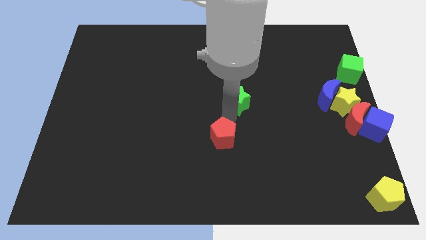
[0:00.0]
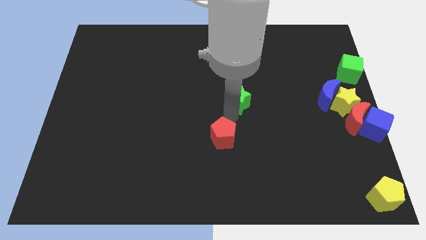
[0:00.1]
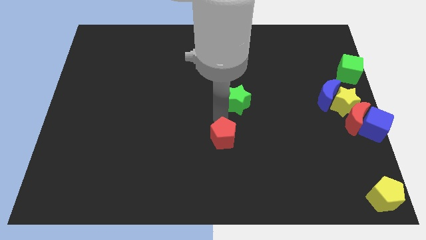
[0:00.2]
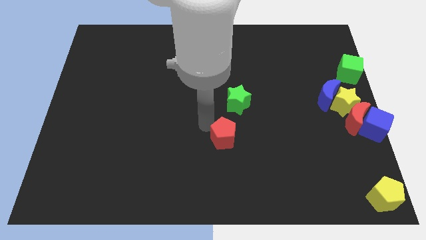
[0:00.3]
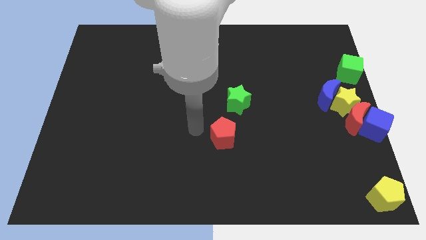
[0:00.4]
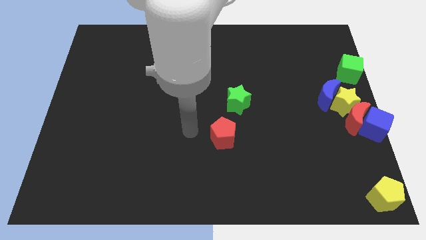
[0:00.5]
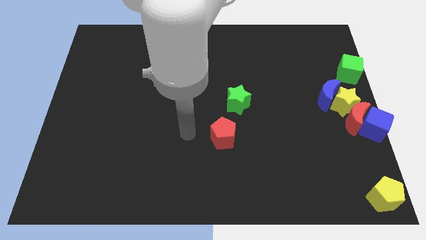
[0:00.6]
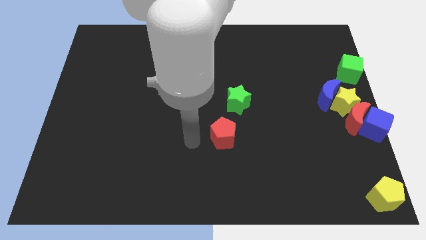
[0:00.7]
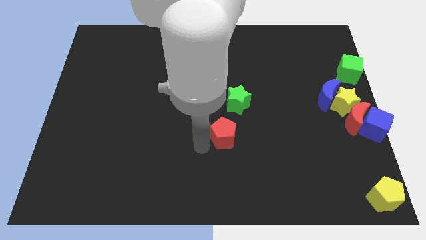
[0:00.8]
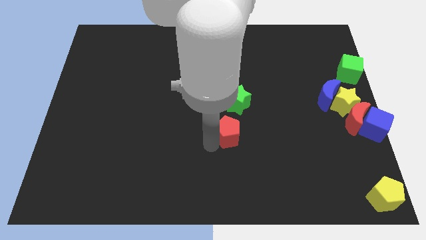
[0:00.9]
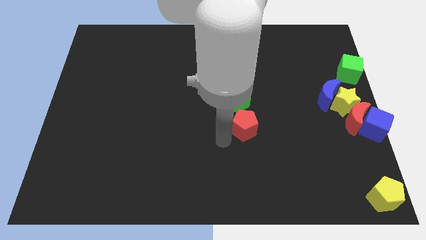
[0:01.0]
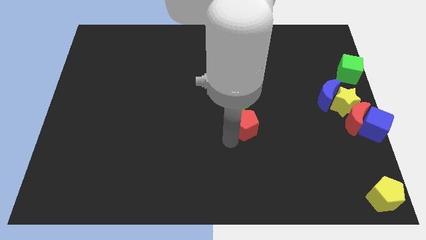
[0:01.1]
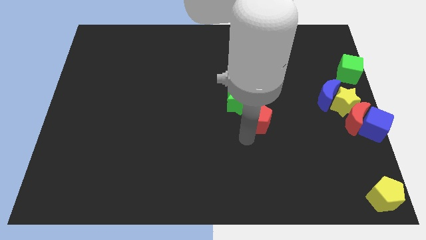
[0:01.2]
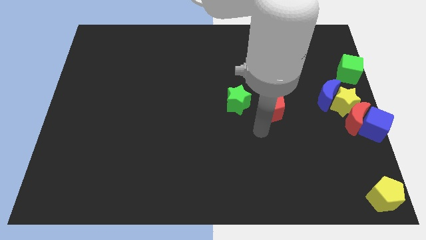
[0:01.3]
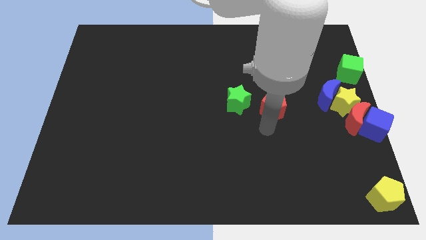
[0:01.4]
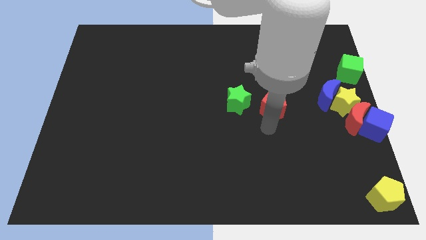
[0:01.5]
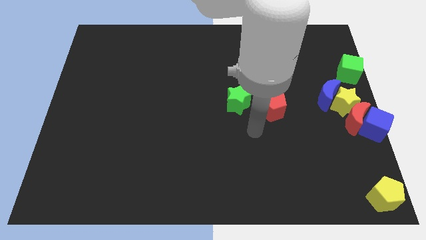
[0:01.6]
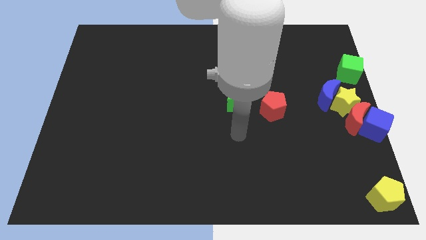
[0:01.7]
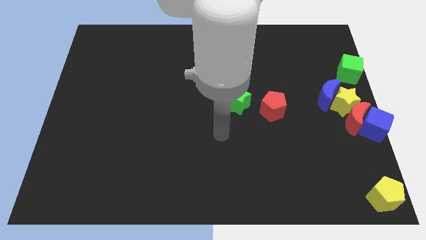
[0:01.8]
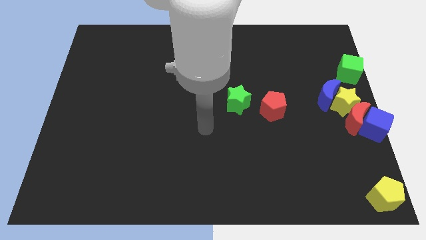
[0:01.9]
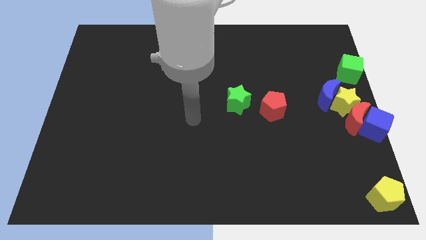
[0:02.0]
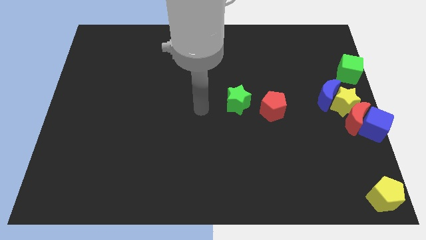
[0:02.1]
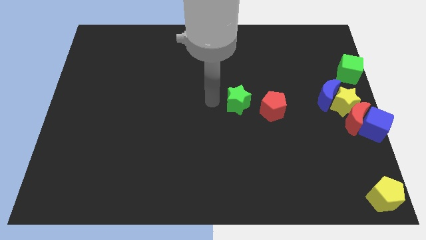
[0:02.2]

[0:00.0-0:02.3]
push the red pentagon right to the green star

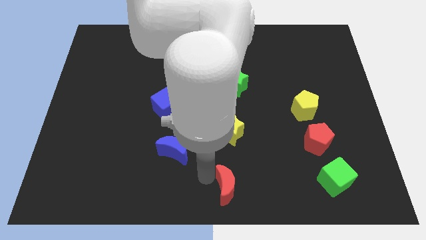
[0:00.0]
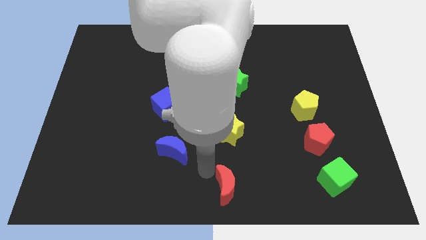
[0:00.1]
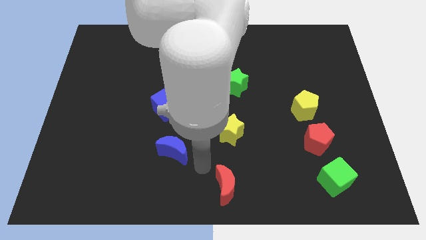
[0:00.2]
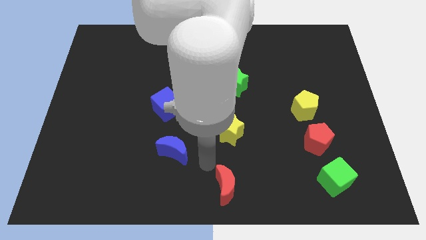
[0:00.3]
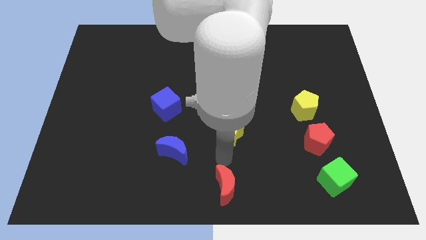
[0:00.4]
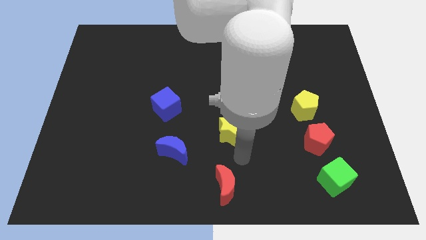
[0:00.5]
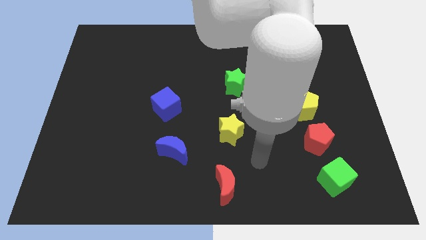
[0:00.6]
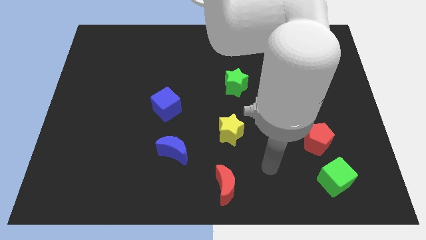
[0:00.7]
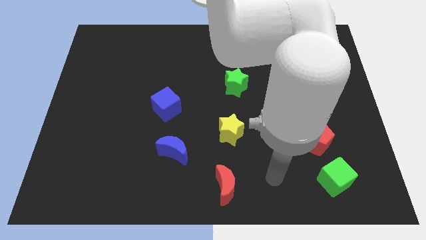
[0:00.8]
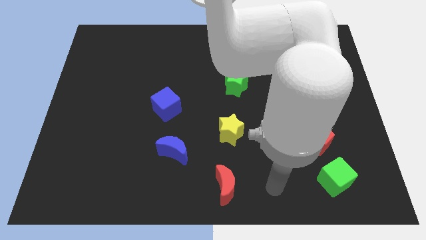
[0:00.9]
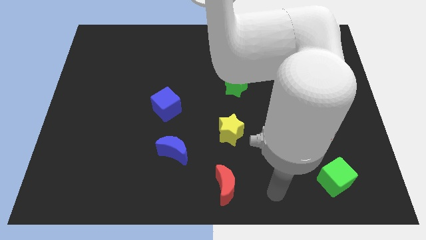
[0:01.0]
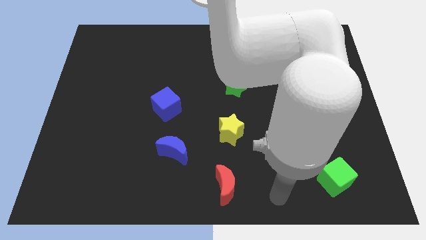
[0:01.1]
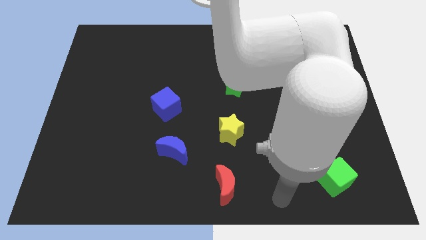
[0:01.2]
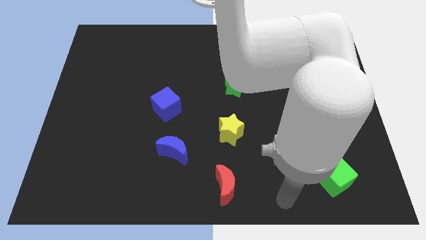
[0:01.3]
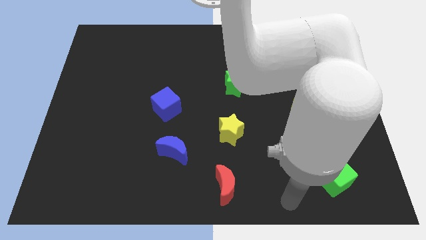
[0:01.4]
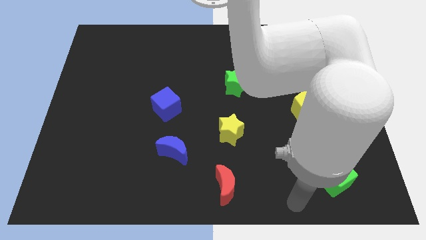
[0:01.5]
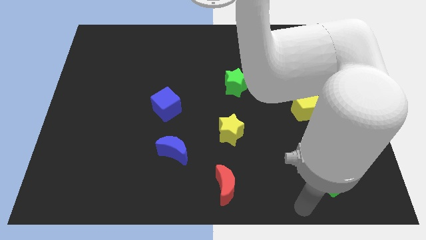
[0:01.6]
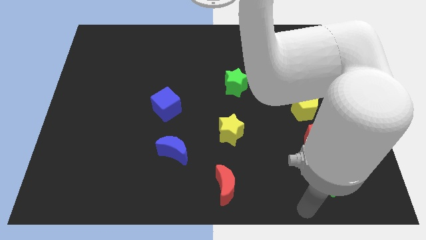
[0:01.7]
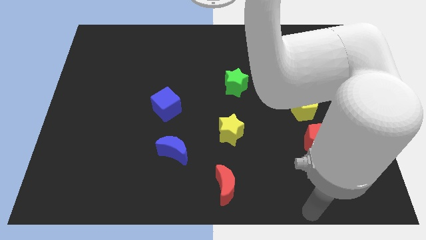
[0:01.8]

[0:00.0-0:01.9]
move away from the red moon

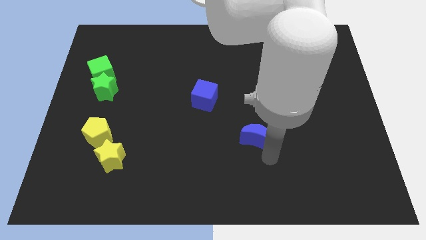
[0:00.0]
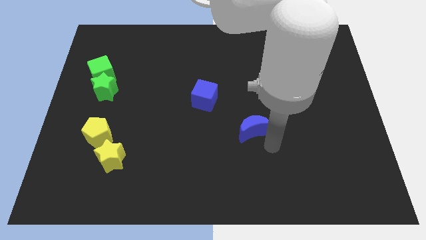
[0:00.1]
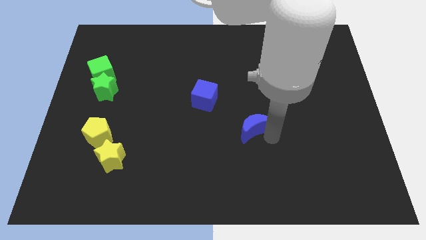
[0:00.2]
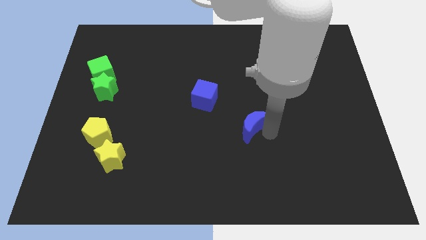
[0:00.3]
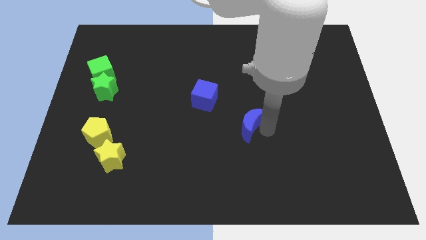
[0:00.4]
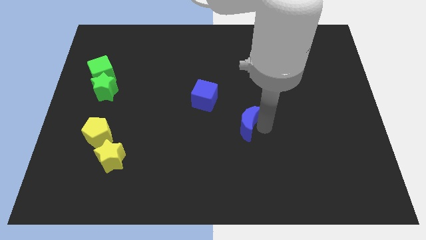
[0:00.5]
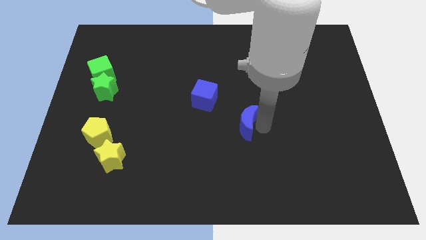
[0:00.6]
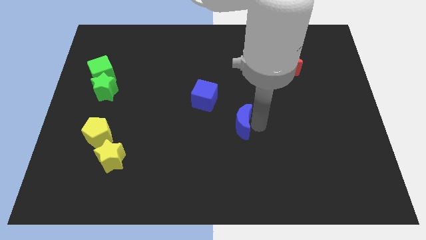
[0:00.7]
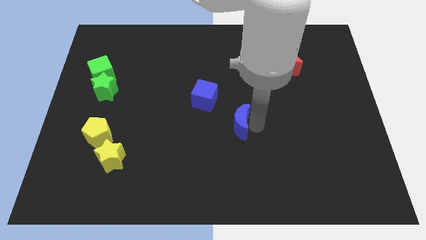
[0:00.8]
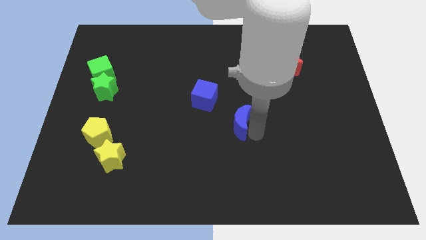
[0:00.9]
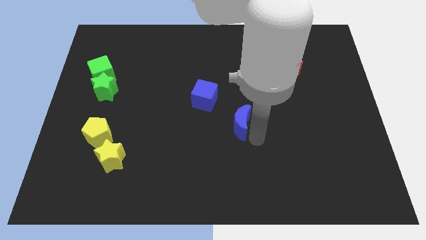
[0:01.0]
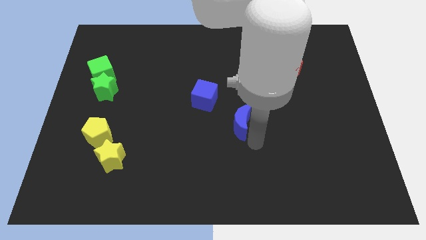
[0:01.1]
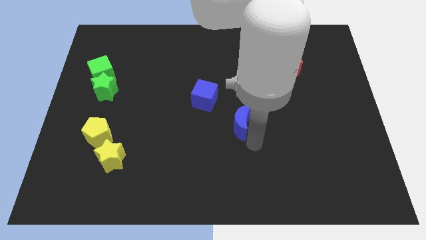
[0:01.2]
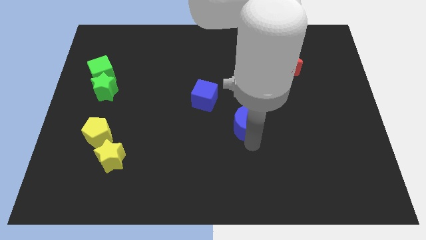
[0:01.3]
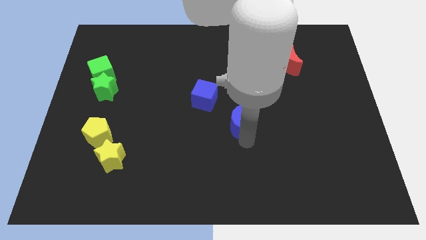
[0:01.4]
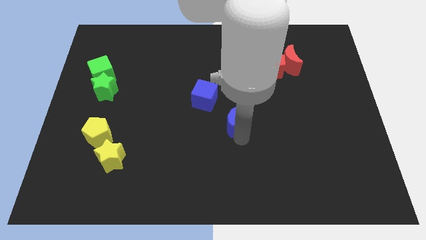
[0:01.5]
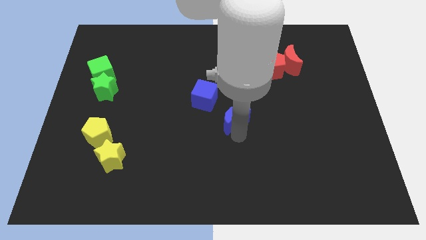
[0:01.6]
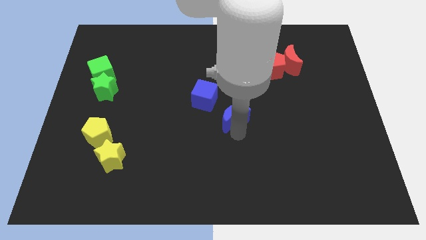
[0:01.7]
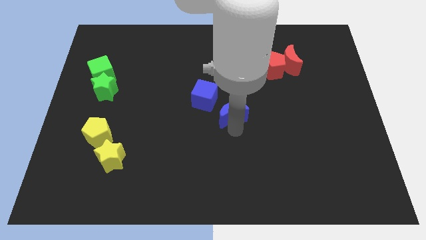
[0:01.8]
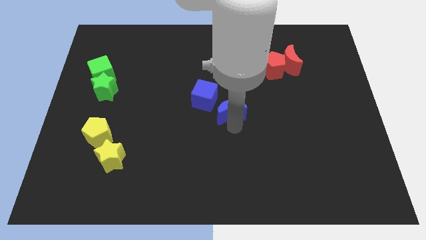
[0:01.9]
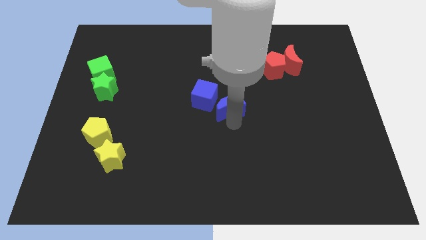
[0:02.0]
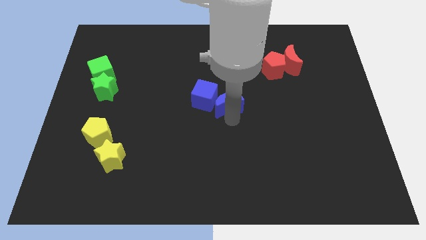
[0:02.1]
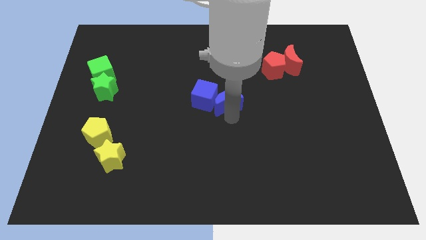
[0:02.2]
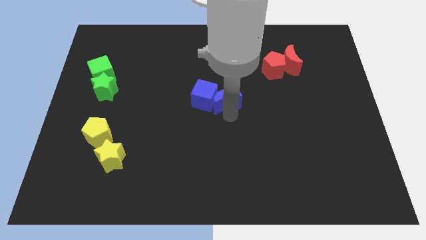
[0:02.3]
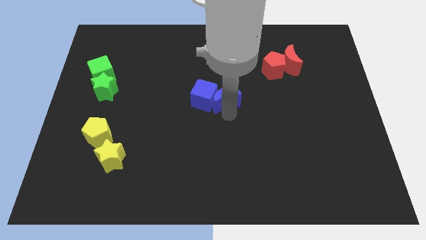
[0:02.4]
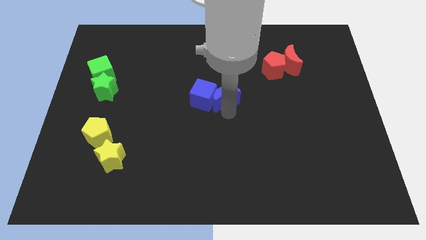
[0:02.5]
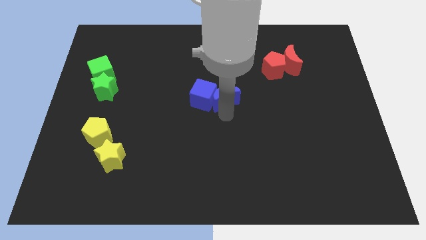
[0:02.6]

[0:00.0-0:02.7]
move the blue crescent to the right of the blue cube

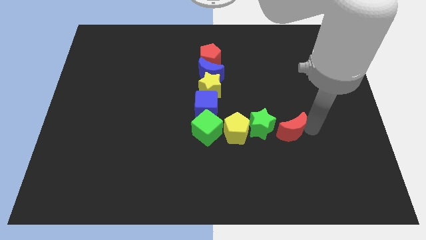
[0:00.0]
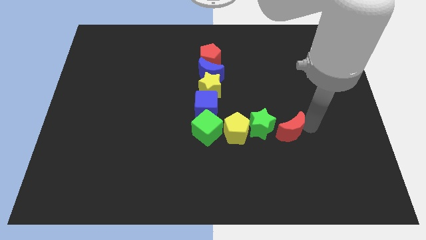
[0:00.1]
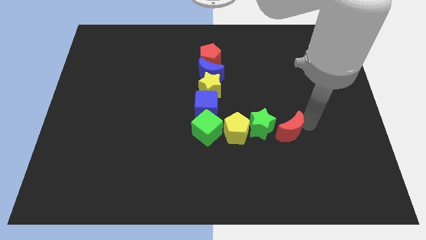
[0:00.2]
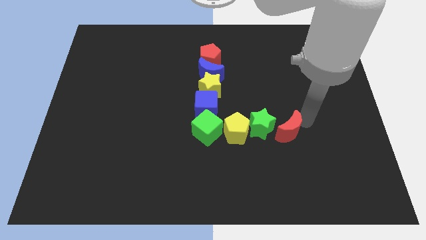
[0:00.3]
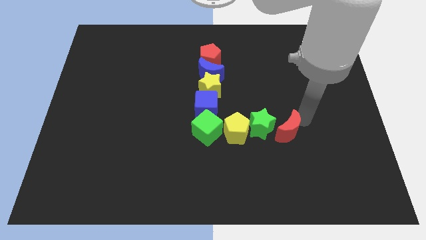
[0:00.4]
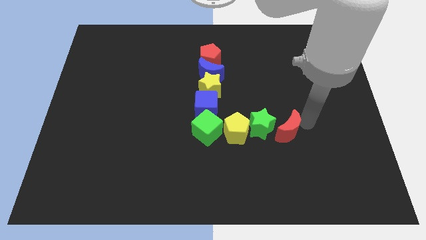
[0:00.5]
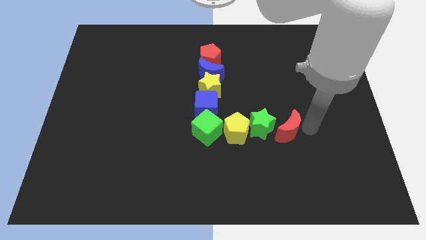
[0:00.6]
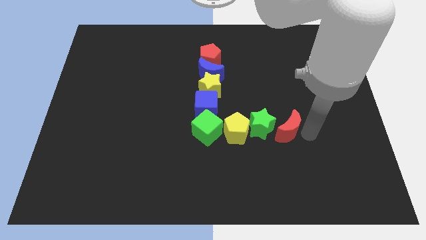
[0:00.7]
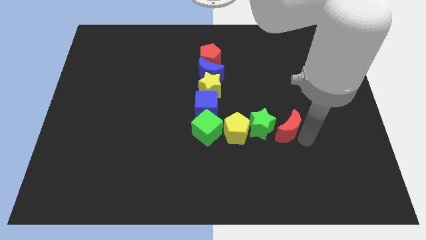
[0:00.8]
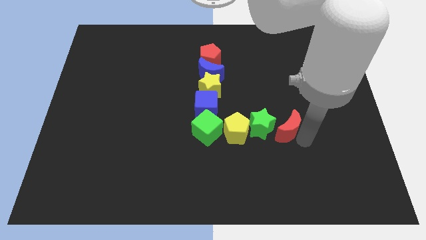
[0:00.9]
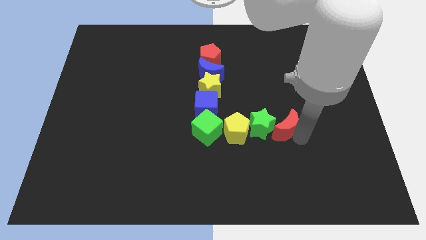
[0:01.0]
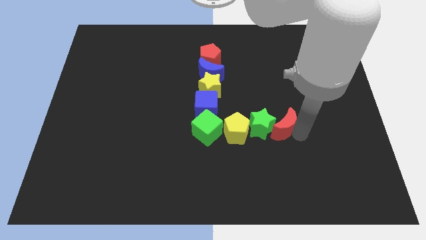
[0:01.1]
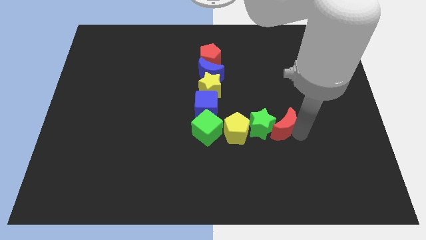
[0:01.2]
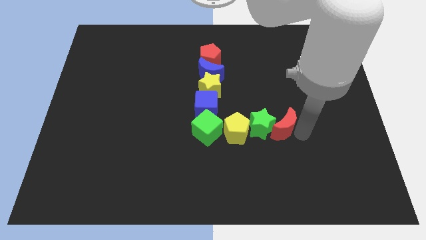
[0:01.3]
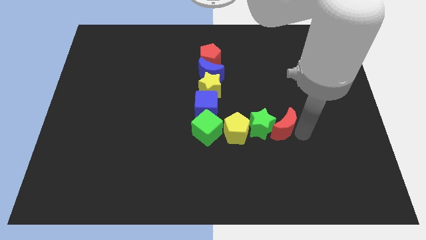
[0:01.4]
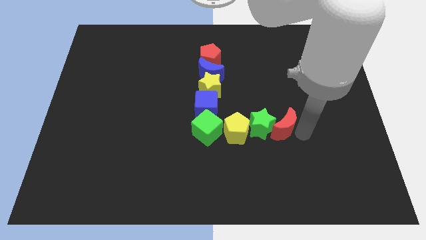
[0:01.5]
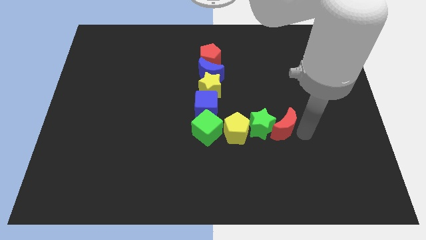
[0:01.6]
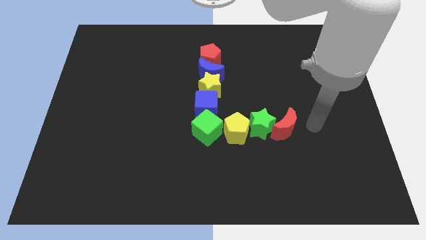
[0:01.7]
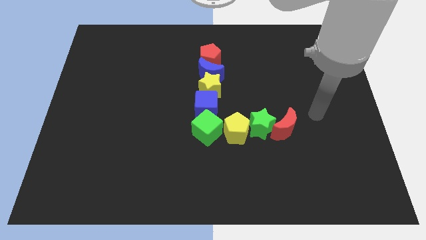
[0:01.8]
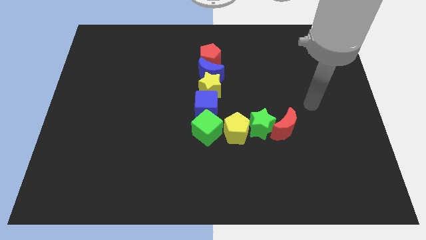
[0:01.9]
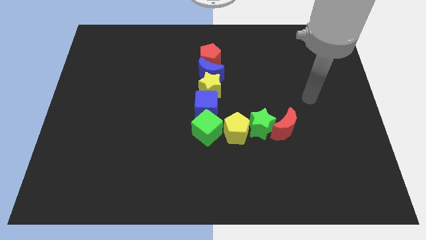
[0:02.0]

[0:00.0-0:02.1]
place red crescent on the right side of the green star
